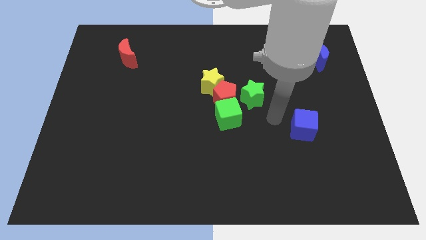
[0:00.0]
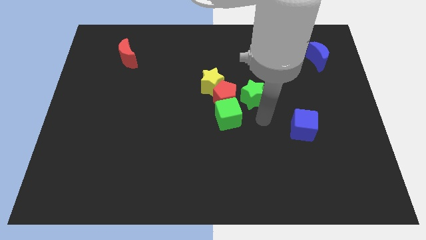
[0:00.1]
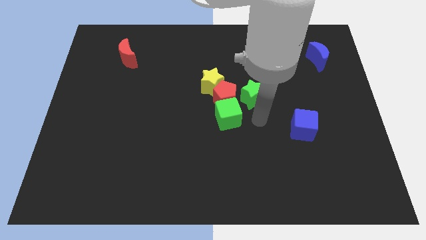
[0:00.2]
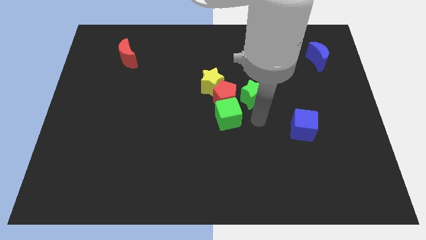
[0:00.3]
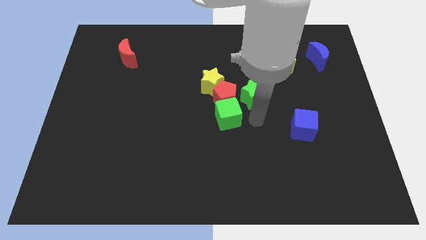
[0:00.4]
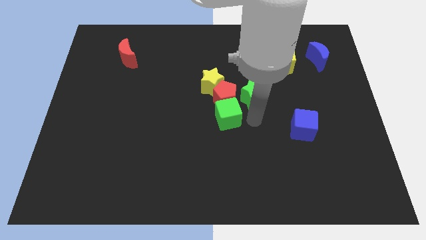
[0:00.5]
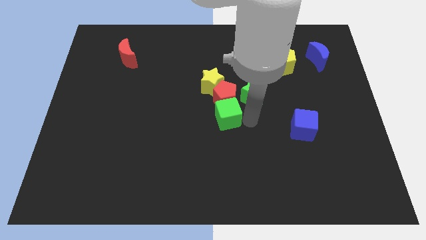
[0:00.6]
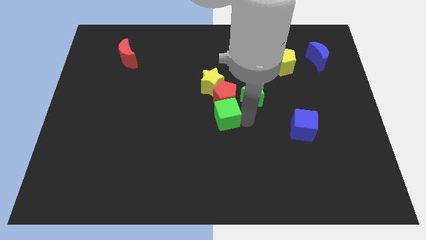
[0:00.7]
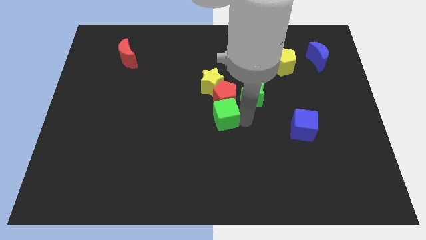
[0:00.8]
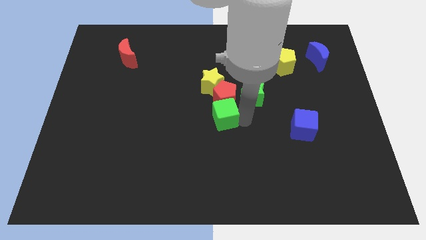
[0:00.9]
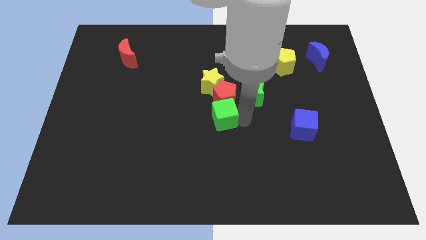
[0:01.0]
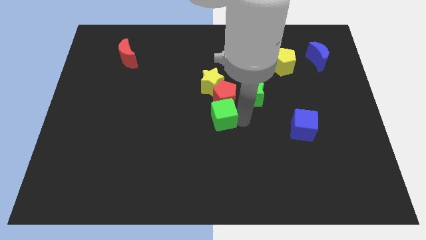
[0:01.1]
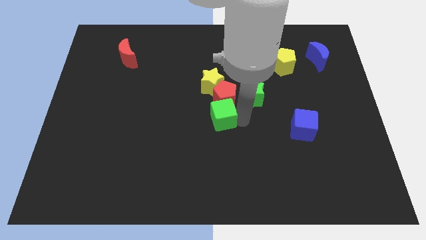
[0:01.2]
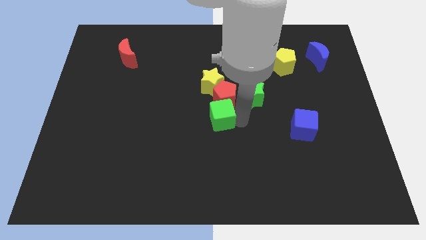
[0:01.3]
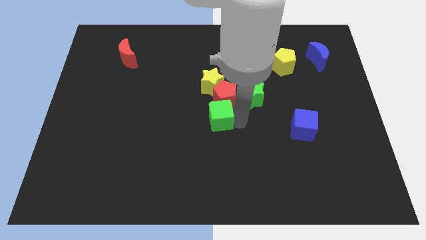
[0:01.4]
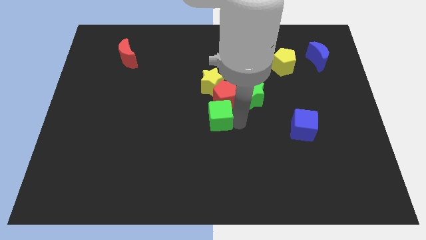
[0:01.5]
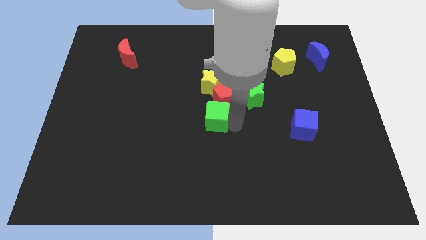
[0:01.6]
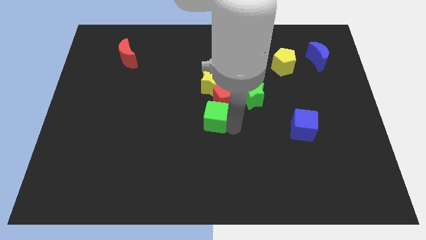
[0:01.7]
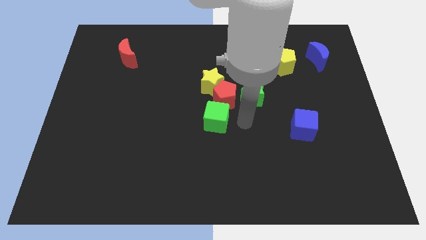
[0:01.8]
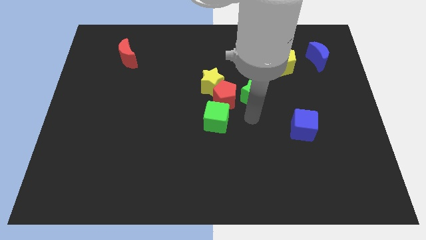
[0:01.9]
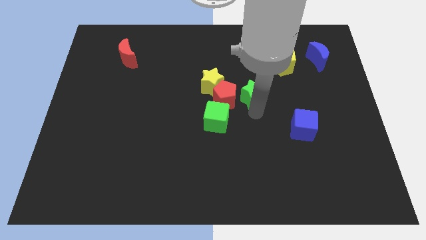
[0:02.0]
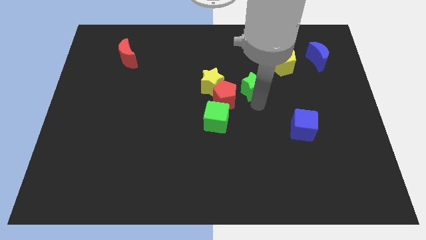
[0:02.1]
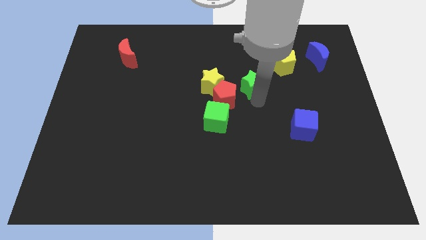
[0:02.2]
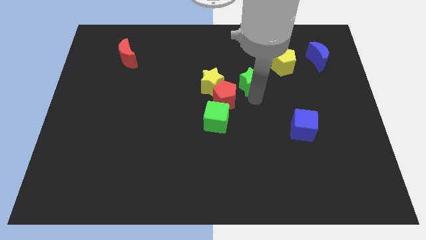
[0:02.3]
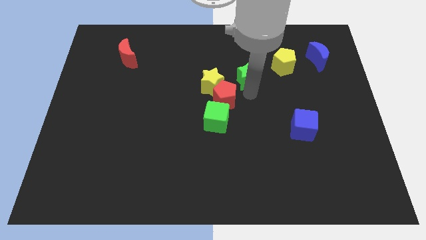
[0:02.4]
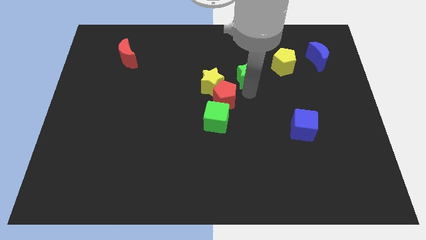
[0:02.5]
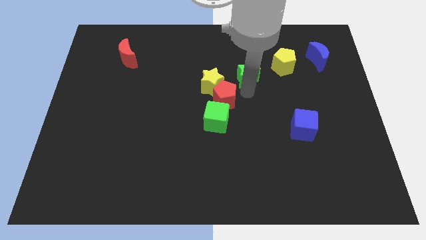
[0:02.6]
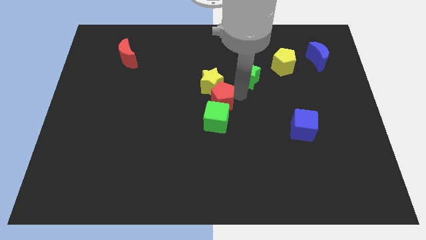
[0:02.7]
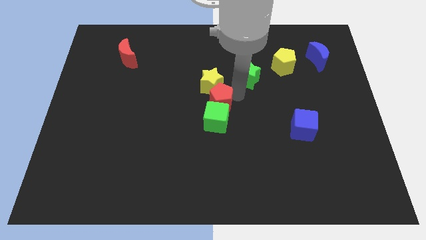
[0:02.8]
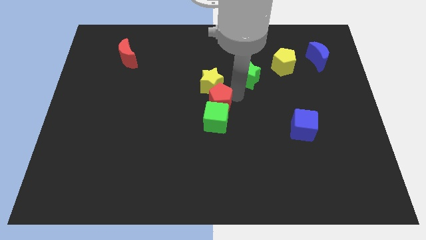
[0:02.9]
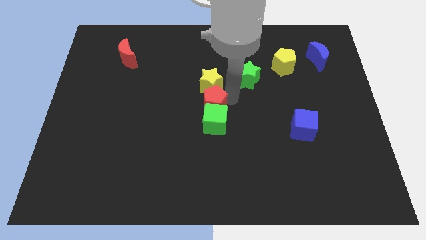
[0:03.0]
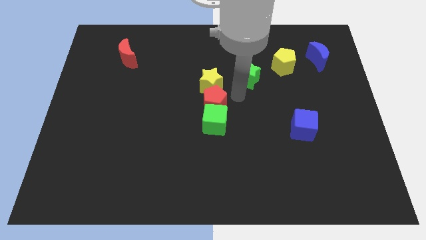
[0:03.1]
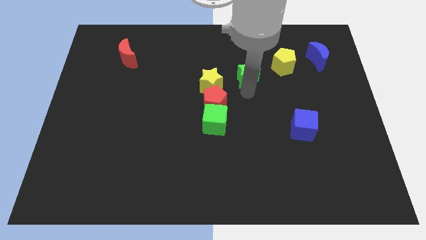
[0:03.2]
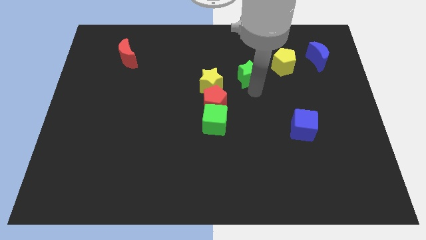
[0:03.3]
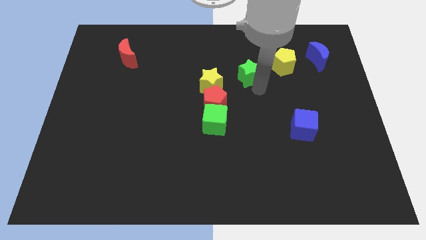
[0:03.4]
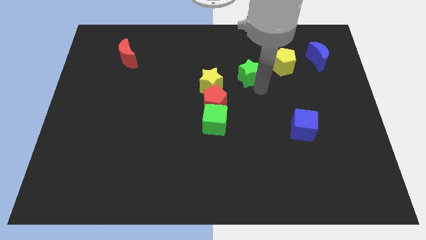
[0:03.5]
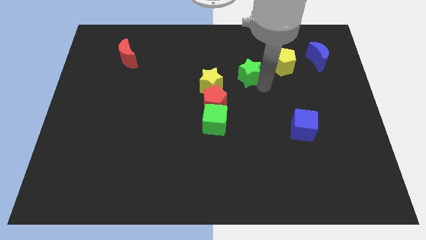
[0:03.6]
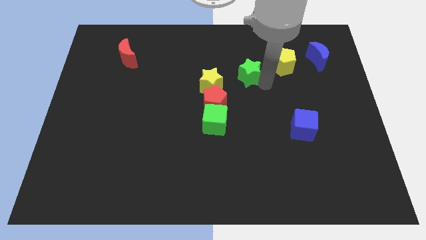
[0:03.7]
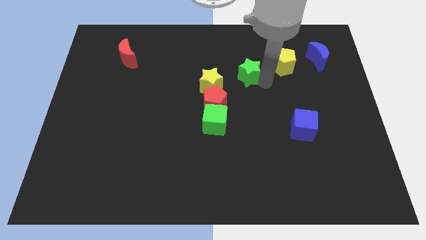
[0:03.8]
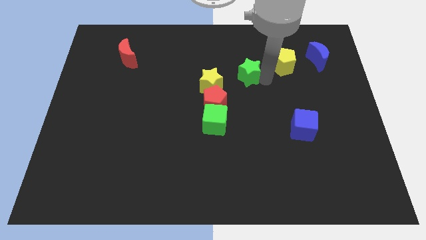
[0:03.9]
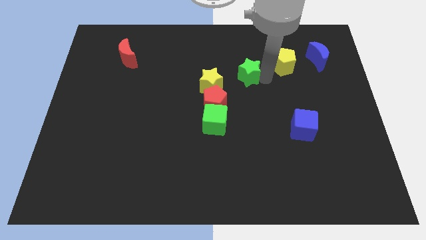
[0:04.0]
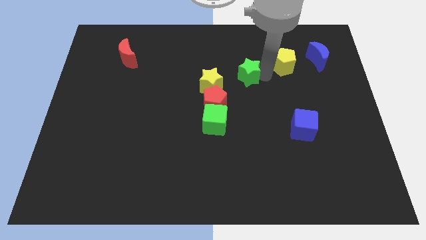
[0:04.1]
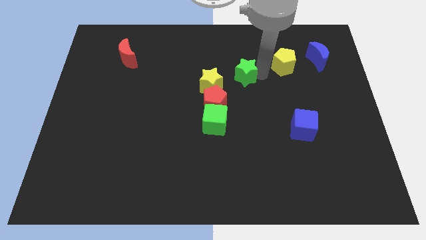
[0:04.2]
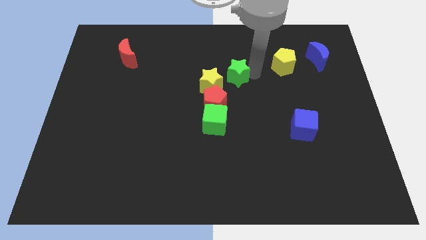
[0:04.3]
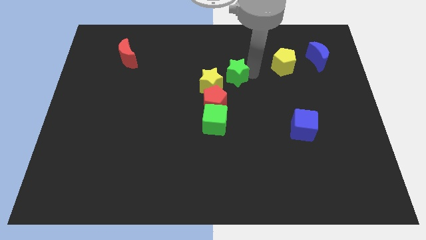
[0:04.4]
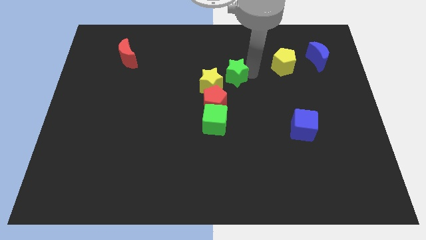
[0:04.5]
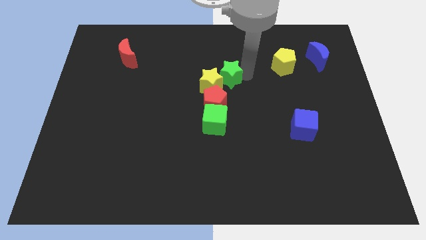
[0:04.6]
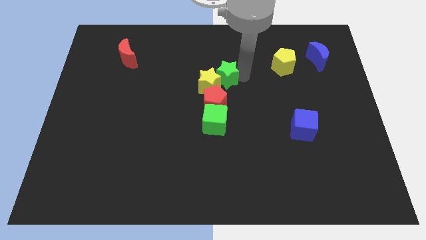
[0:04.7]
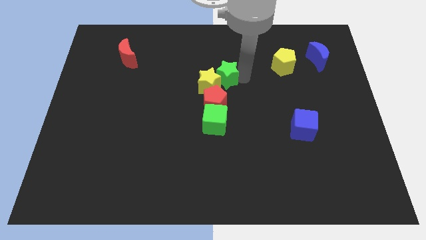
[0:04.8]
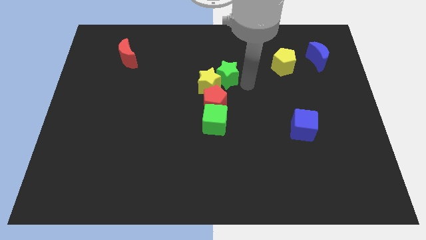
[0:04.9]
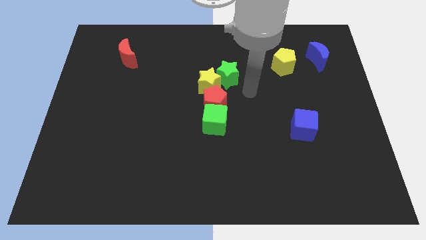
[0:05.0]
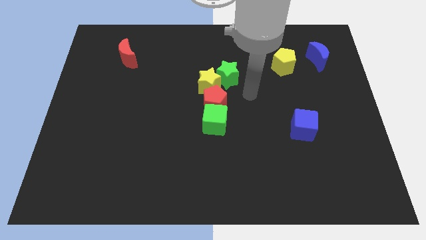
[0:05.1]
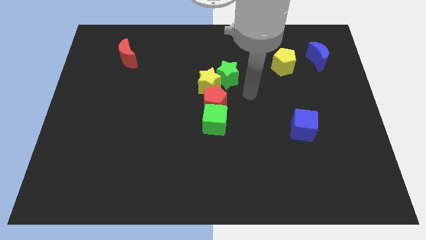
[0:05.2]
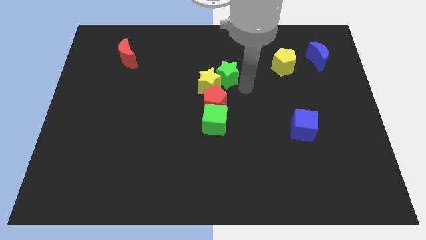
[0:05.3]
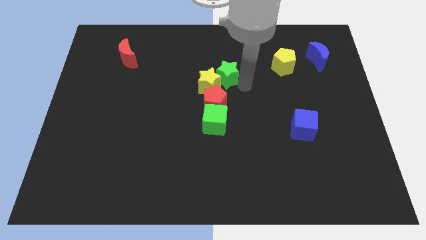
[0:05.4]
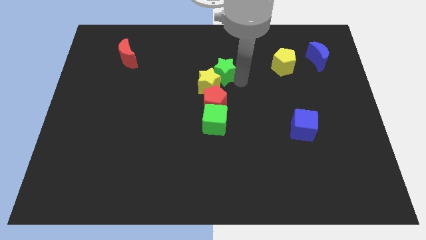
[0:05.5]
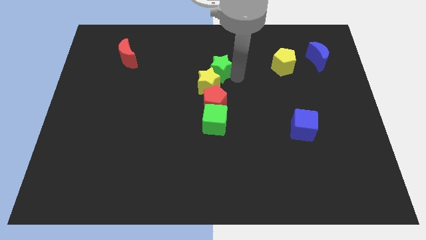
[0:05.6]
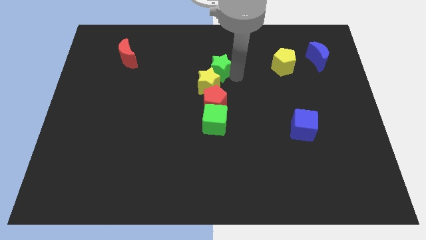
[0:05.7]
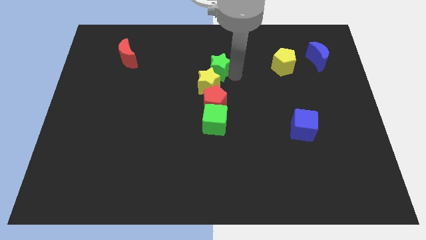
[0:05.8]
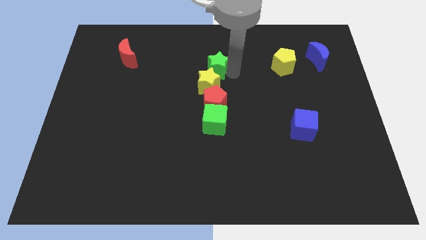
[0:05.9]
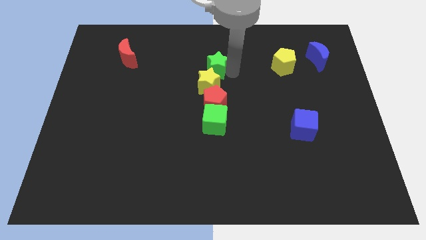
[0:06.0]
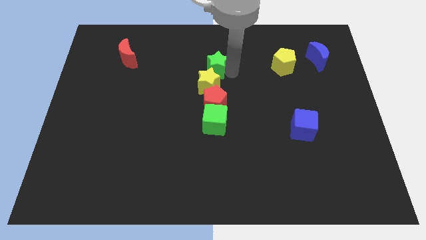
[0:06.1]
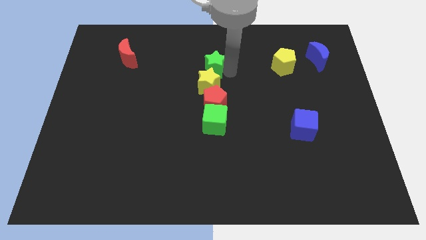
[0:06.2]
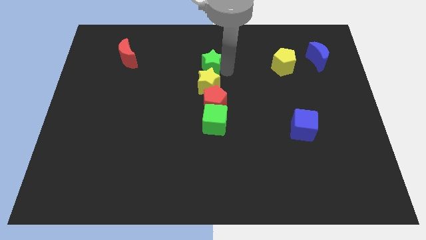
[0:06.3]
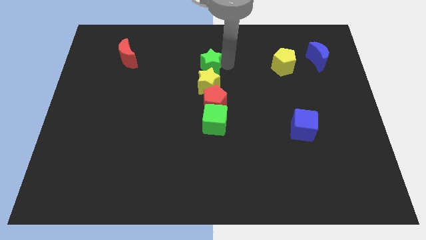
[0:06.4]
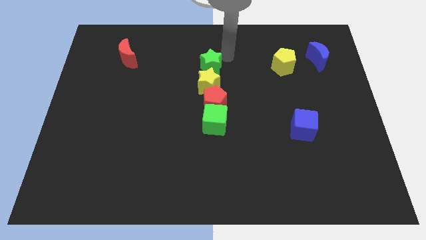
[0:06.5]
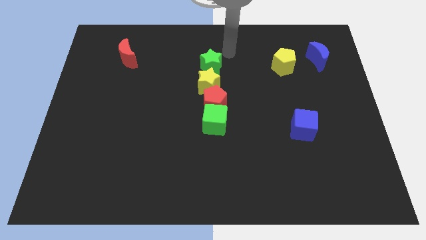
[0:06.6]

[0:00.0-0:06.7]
arrange the group of blocks properly in a line

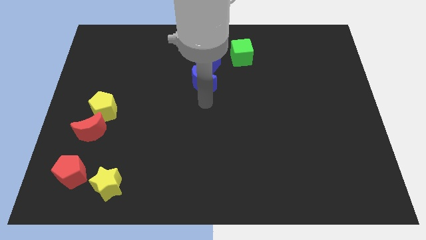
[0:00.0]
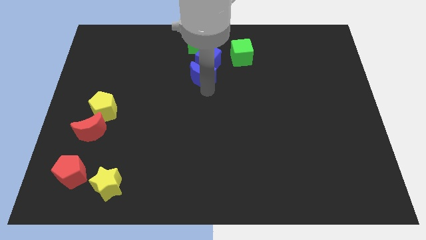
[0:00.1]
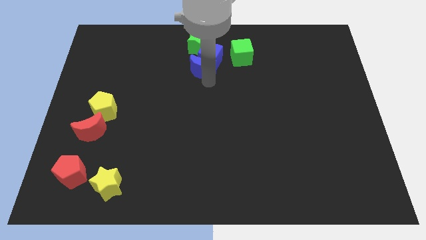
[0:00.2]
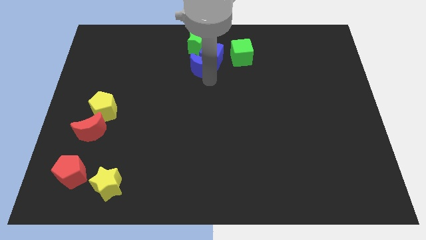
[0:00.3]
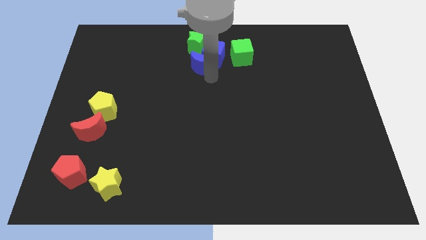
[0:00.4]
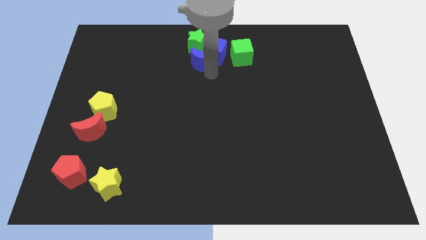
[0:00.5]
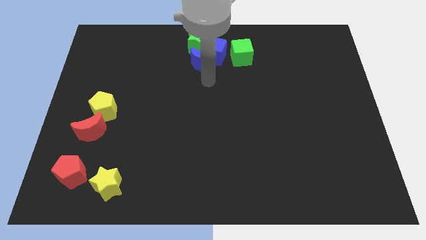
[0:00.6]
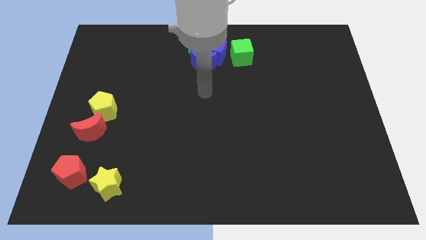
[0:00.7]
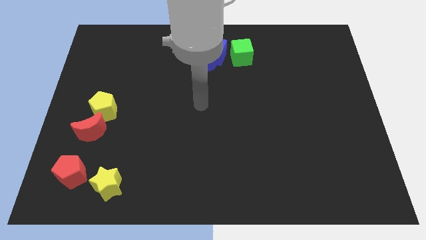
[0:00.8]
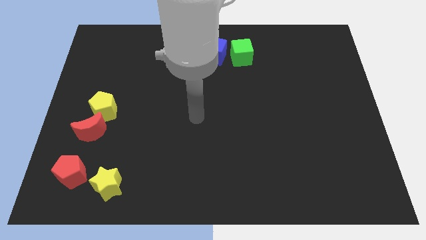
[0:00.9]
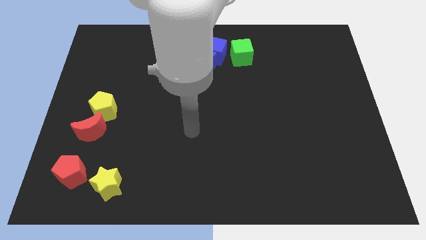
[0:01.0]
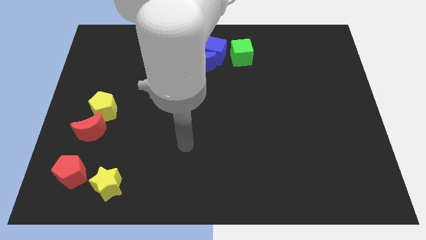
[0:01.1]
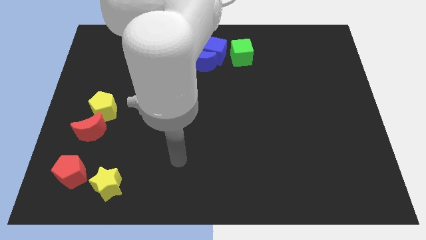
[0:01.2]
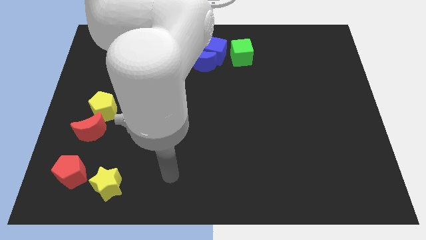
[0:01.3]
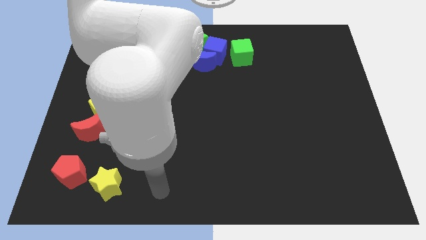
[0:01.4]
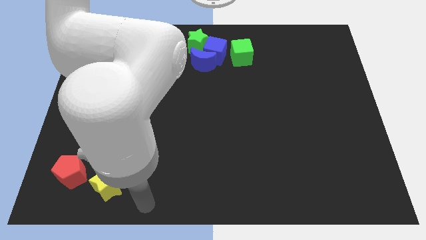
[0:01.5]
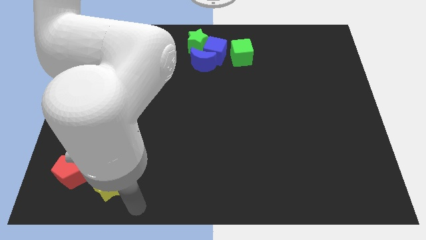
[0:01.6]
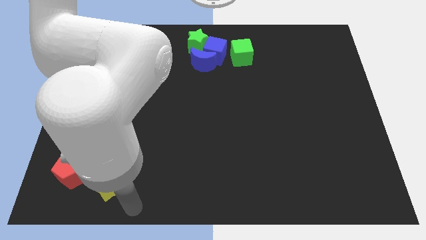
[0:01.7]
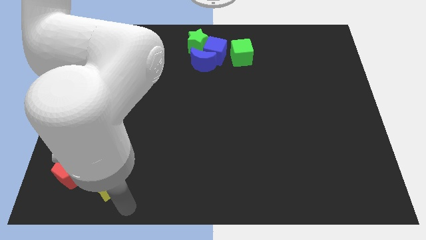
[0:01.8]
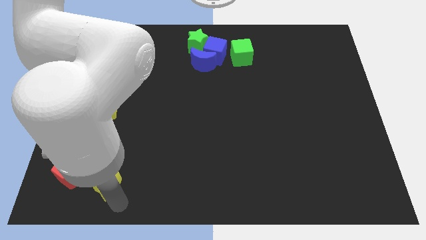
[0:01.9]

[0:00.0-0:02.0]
move the arm below the yellow star
